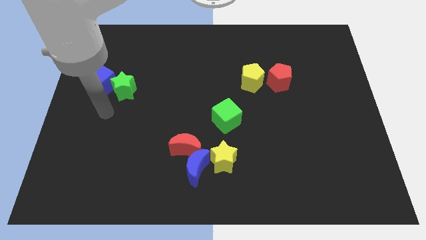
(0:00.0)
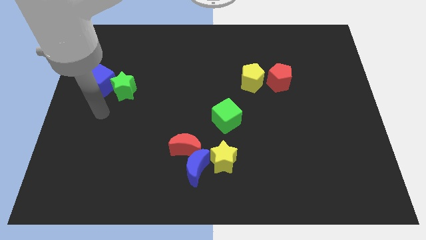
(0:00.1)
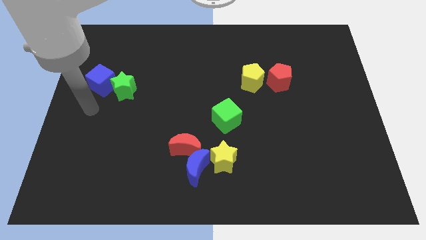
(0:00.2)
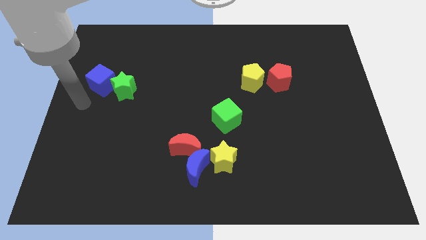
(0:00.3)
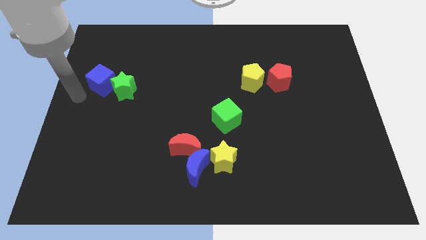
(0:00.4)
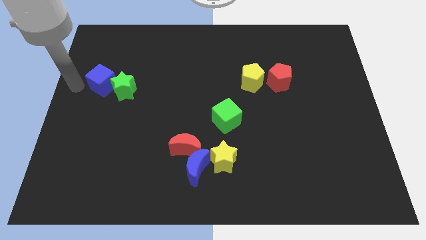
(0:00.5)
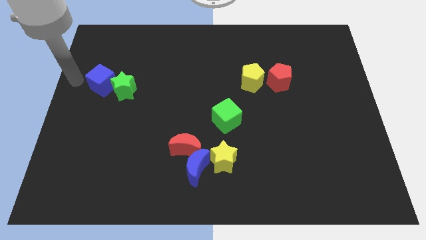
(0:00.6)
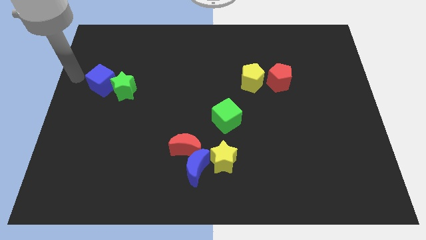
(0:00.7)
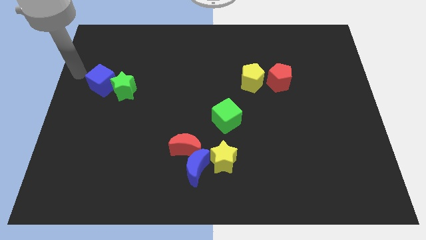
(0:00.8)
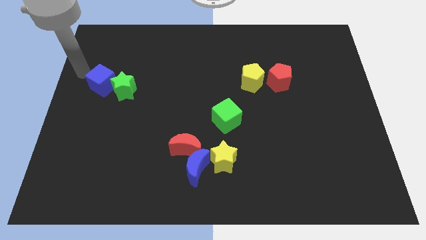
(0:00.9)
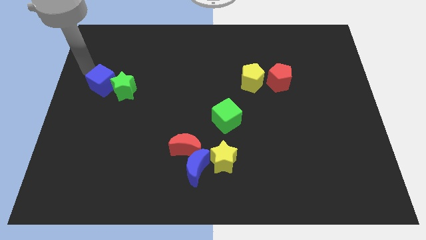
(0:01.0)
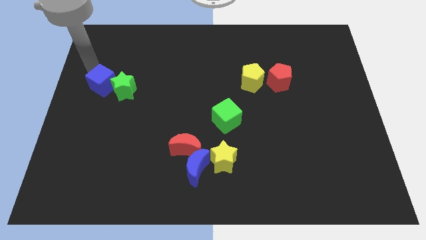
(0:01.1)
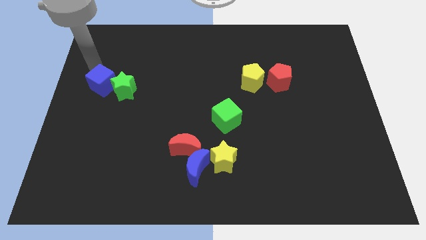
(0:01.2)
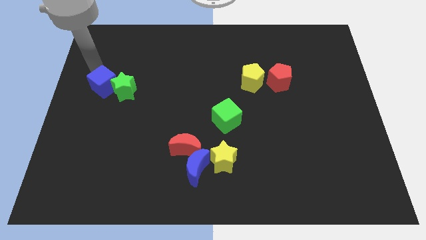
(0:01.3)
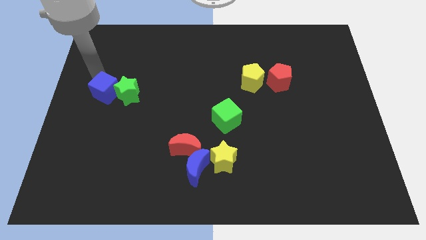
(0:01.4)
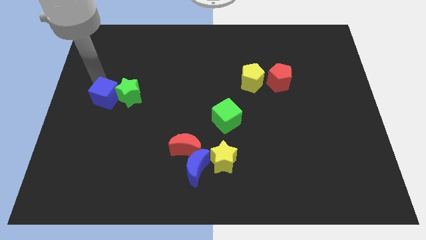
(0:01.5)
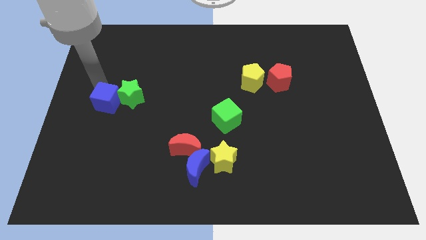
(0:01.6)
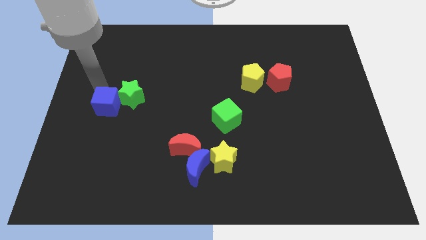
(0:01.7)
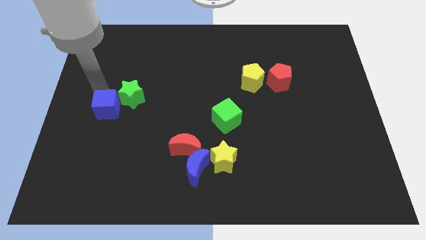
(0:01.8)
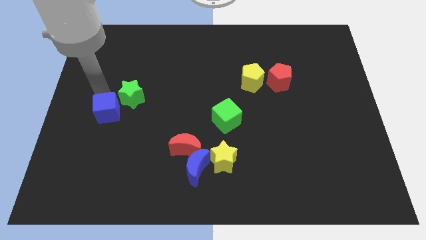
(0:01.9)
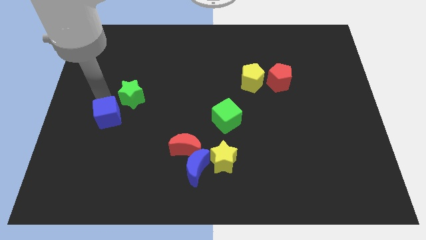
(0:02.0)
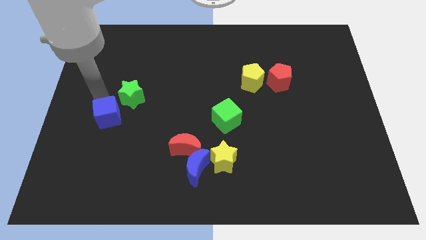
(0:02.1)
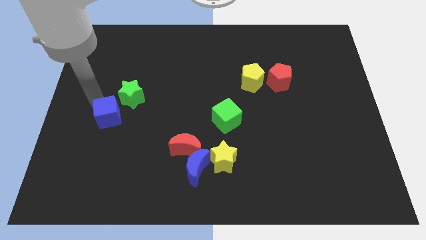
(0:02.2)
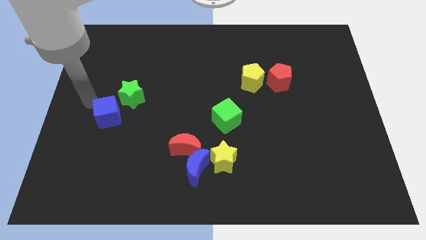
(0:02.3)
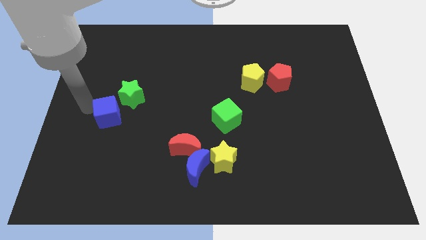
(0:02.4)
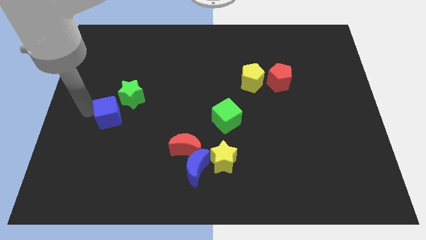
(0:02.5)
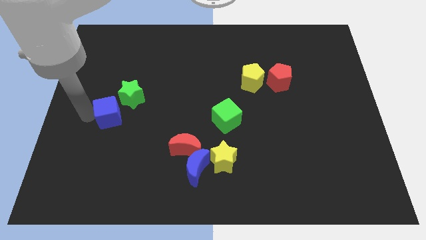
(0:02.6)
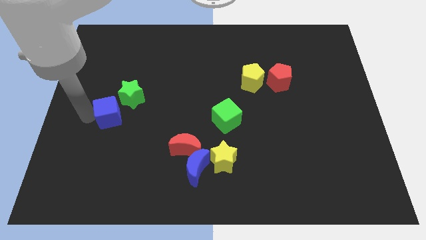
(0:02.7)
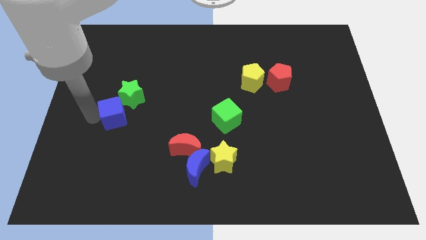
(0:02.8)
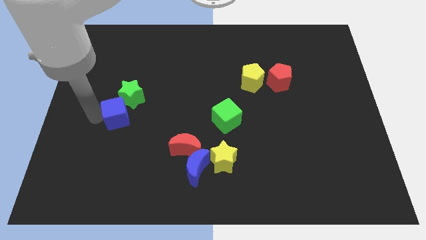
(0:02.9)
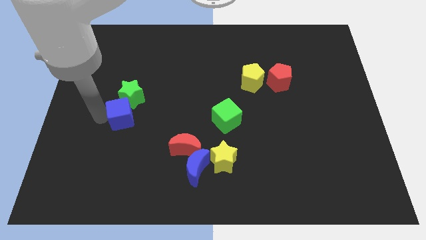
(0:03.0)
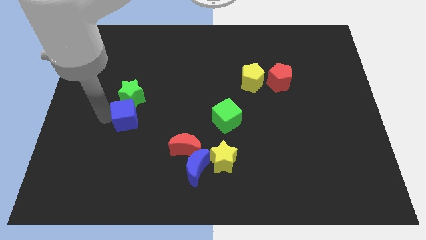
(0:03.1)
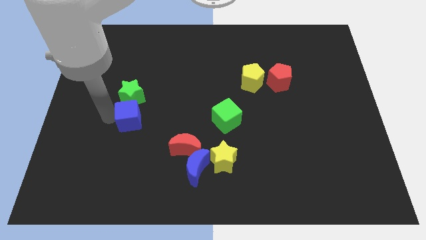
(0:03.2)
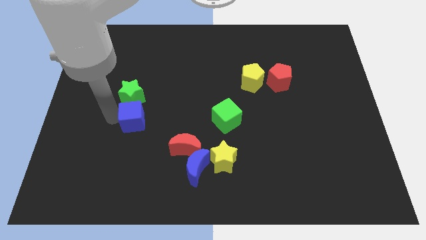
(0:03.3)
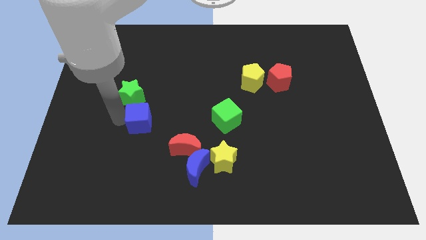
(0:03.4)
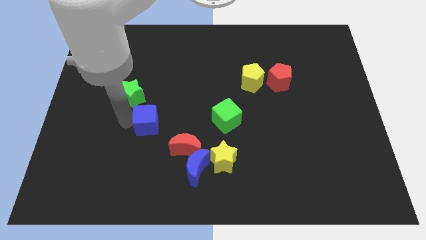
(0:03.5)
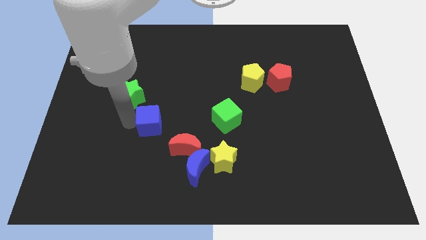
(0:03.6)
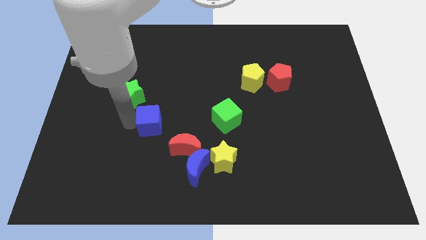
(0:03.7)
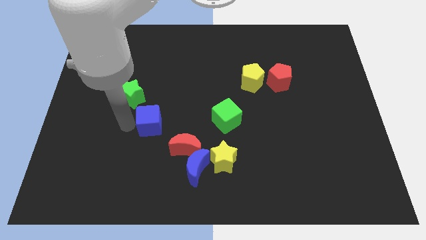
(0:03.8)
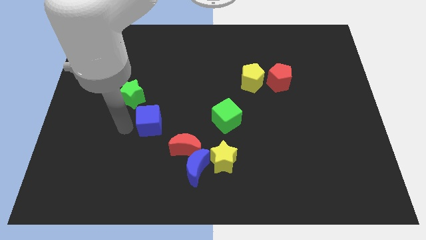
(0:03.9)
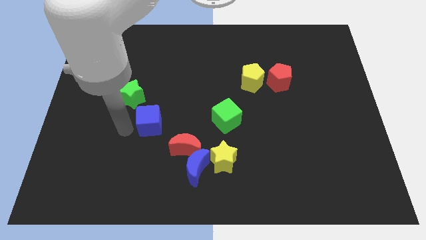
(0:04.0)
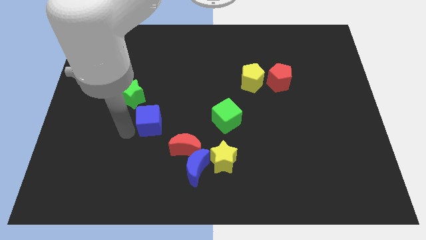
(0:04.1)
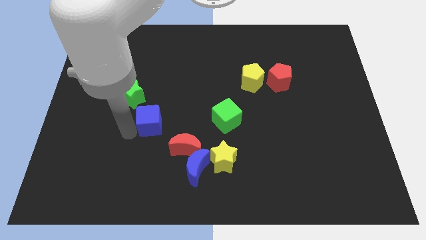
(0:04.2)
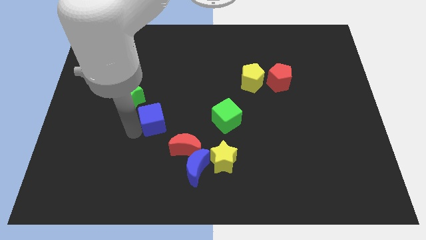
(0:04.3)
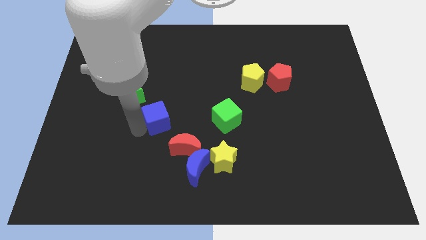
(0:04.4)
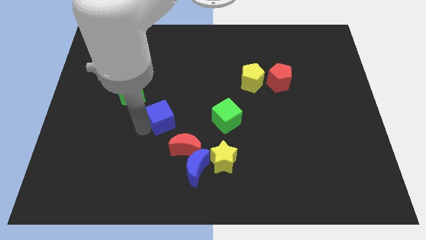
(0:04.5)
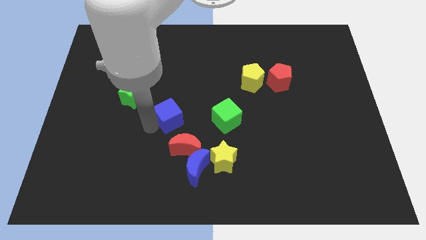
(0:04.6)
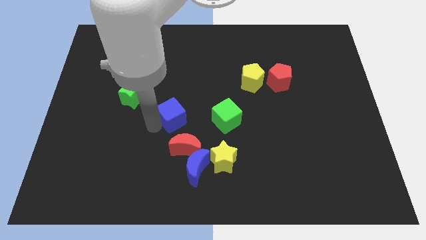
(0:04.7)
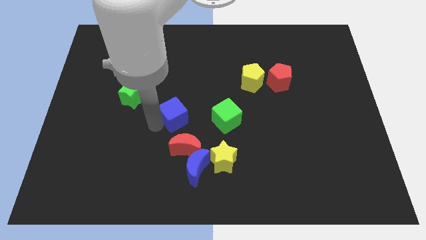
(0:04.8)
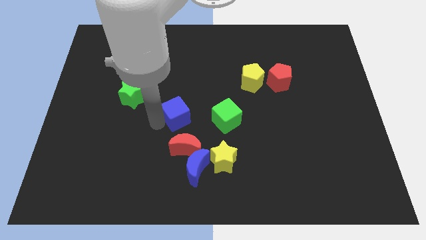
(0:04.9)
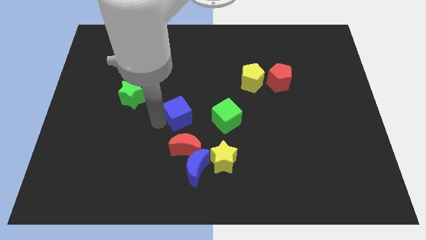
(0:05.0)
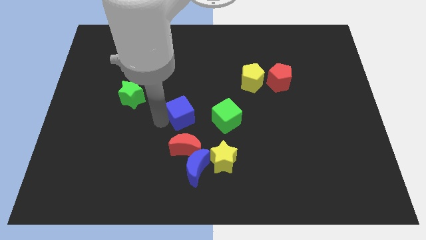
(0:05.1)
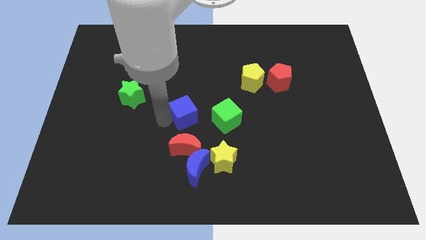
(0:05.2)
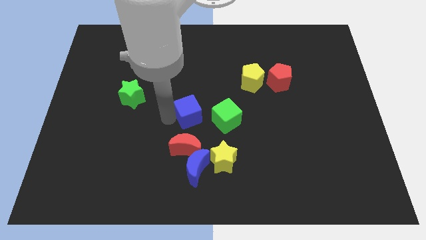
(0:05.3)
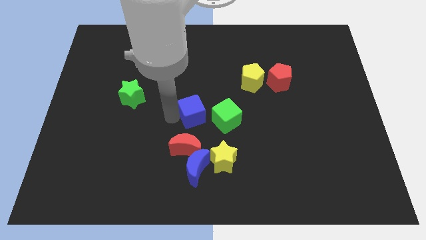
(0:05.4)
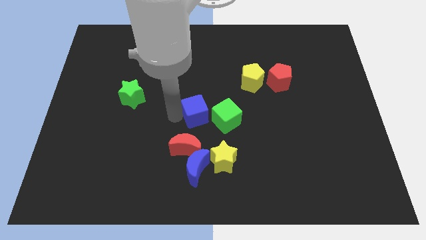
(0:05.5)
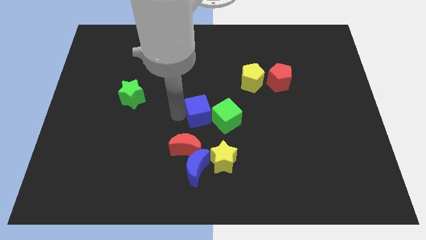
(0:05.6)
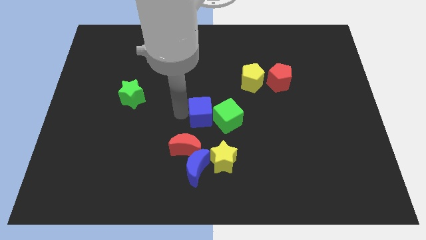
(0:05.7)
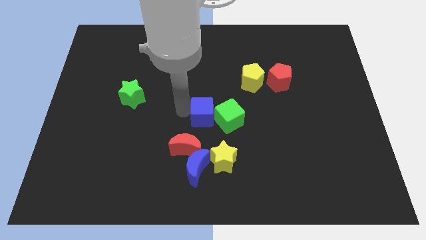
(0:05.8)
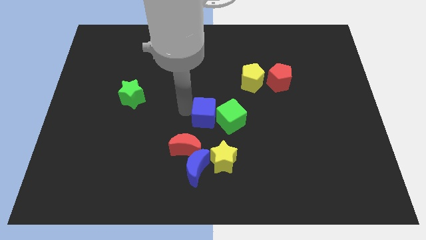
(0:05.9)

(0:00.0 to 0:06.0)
slide the blue cube next to the green cube

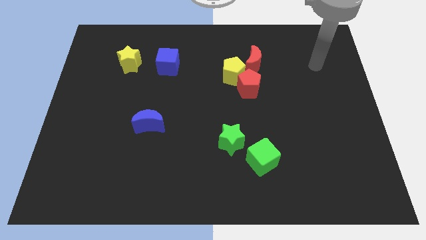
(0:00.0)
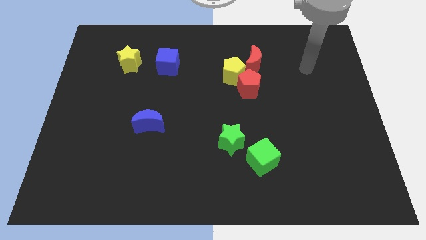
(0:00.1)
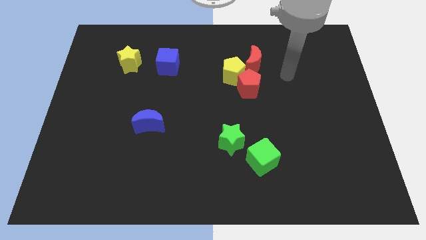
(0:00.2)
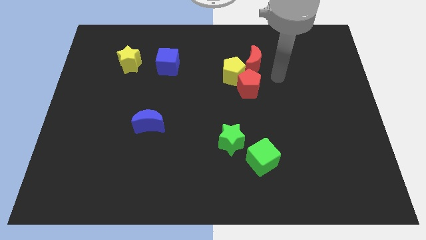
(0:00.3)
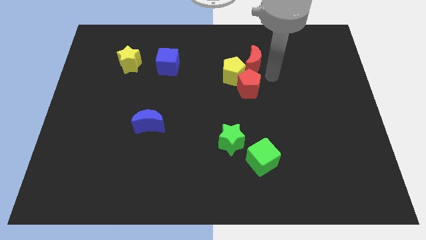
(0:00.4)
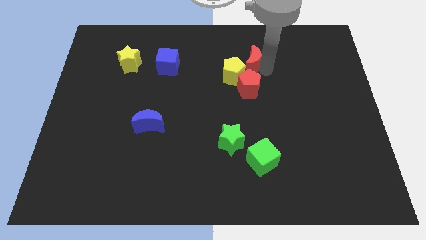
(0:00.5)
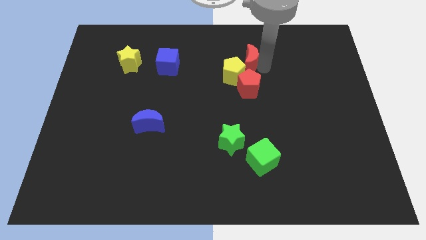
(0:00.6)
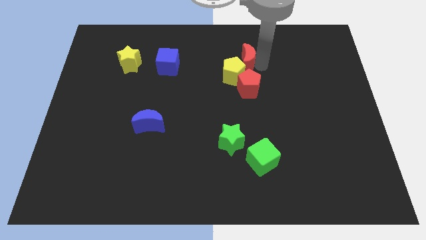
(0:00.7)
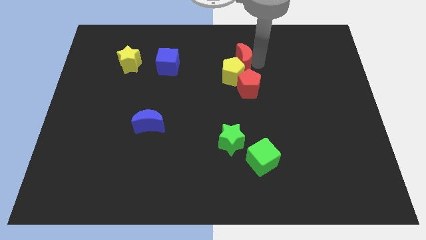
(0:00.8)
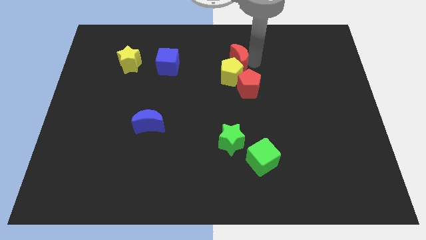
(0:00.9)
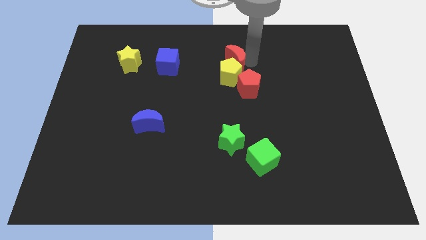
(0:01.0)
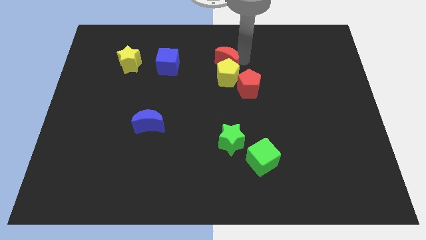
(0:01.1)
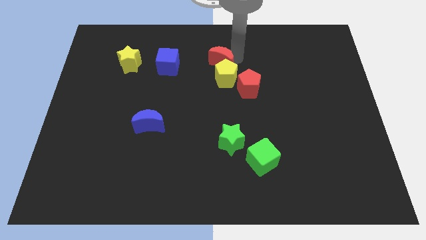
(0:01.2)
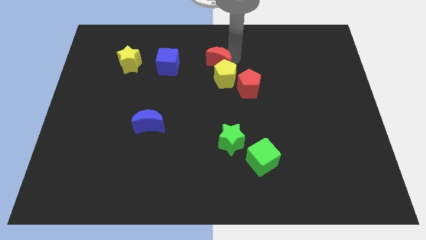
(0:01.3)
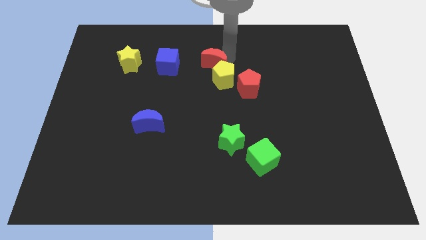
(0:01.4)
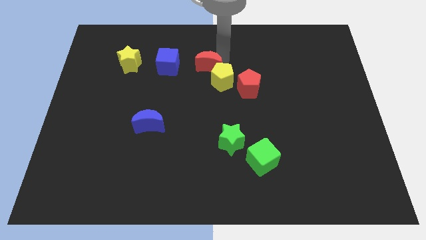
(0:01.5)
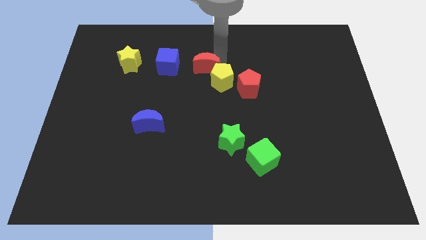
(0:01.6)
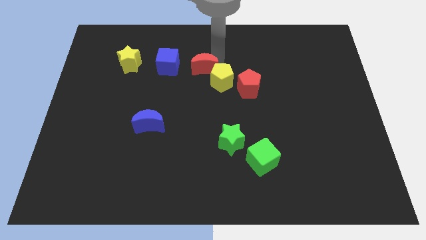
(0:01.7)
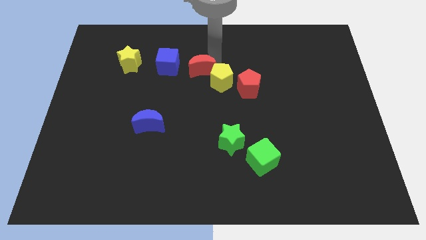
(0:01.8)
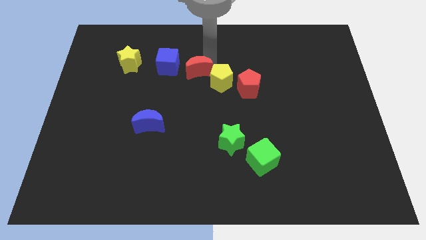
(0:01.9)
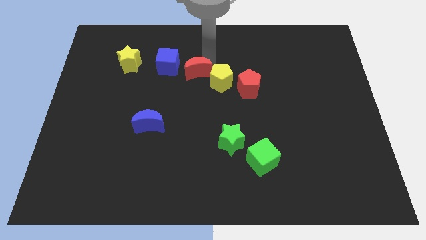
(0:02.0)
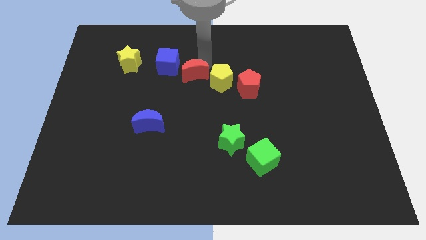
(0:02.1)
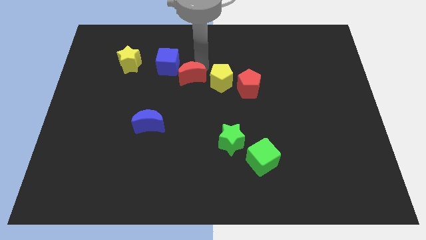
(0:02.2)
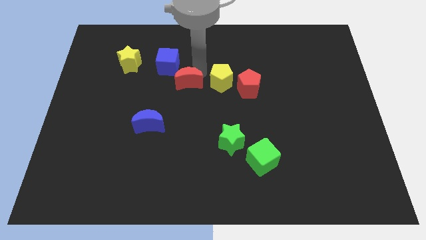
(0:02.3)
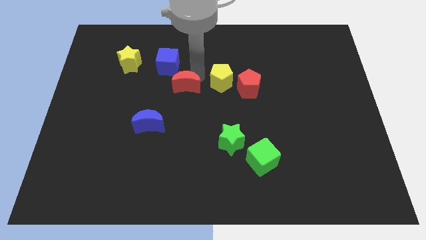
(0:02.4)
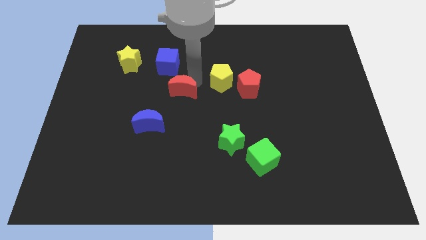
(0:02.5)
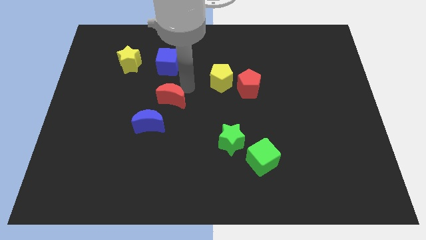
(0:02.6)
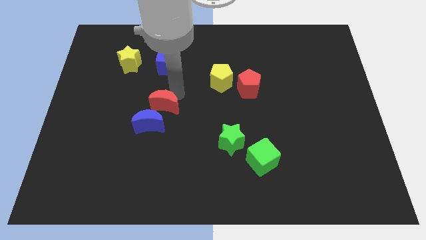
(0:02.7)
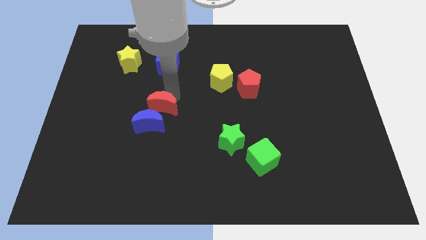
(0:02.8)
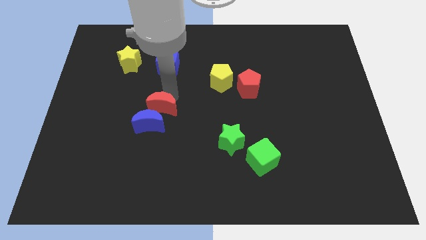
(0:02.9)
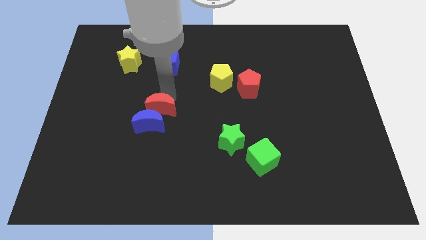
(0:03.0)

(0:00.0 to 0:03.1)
slide the red moon close to the blue moon
